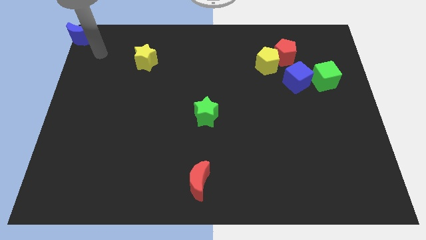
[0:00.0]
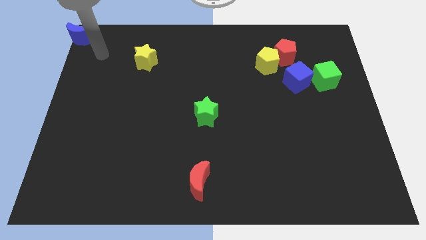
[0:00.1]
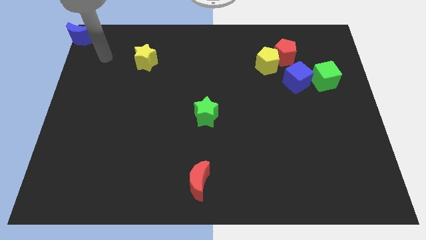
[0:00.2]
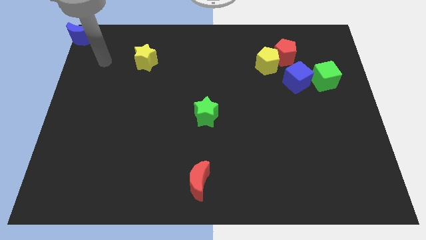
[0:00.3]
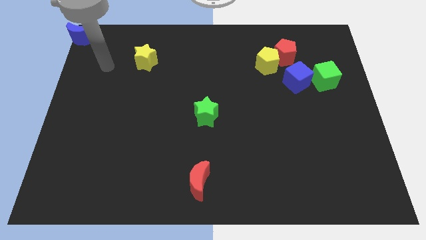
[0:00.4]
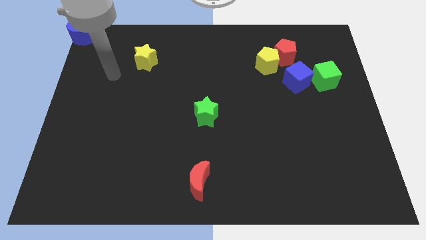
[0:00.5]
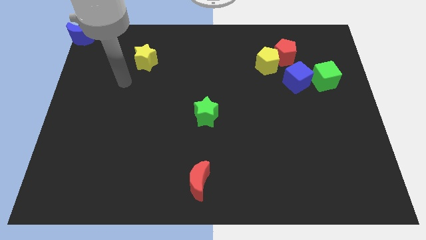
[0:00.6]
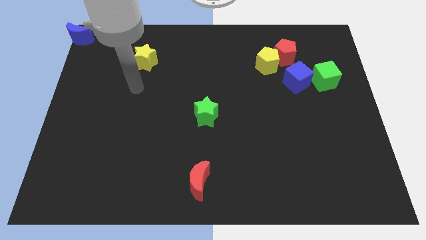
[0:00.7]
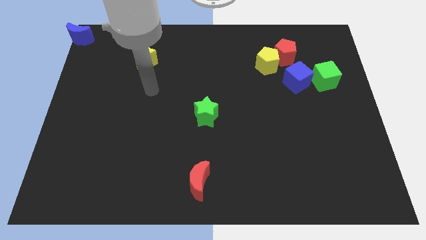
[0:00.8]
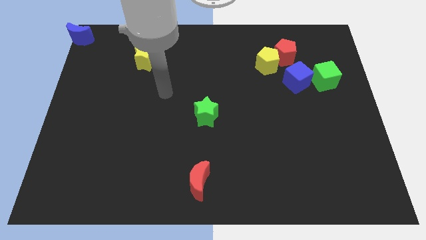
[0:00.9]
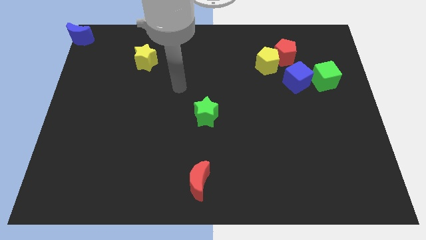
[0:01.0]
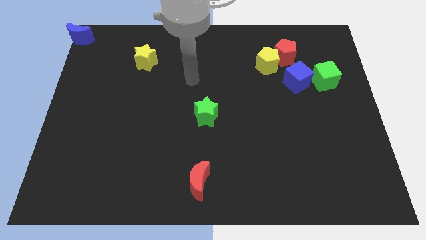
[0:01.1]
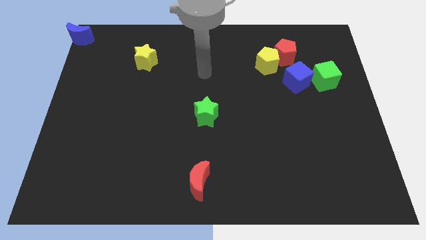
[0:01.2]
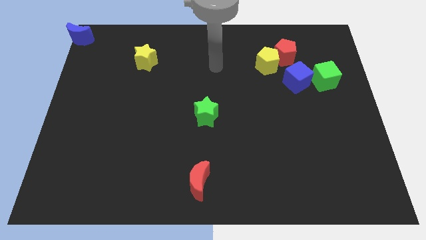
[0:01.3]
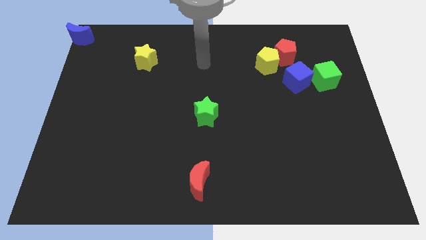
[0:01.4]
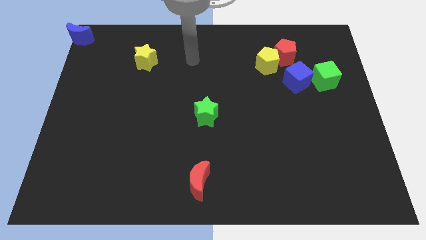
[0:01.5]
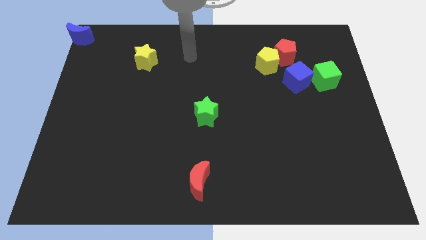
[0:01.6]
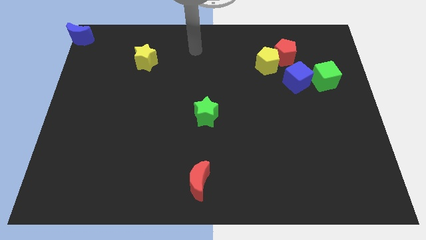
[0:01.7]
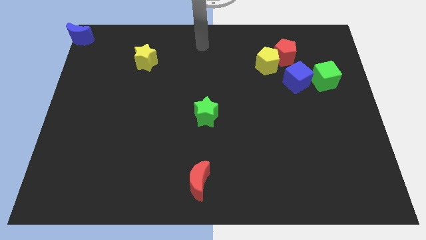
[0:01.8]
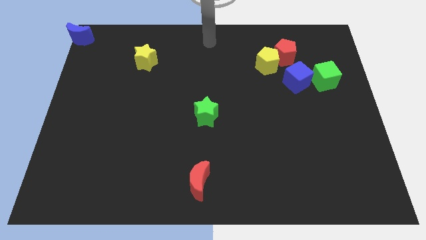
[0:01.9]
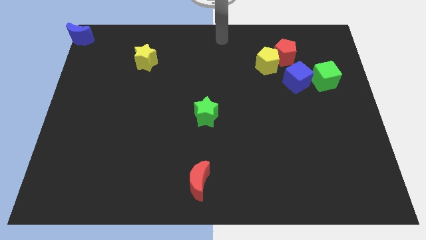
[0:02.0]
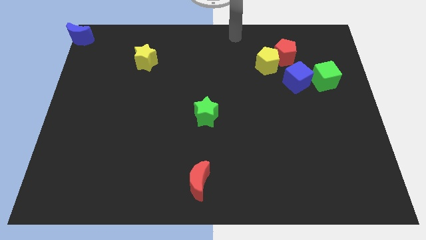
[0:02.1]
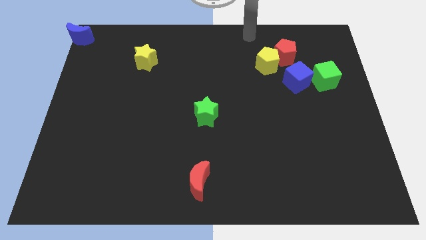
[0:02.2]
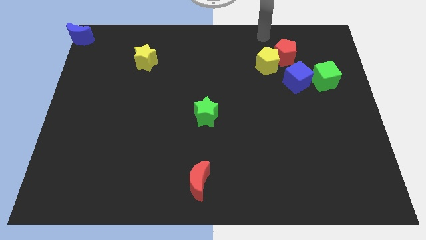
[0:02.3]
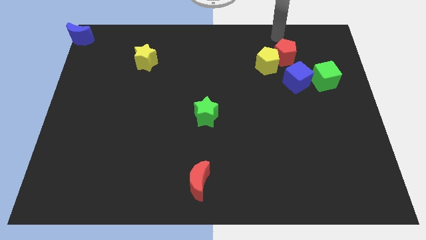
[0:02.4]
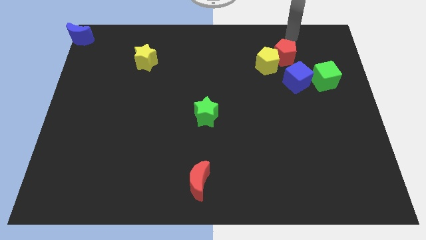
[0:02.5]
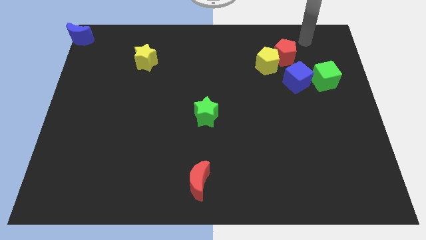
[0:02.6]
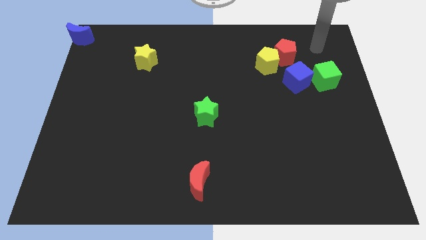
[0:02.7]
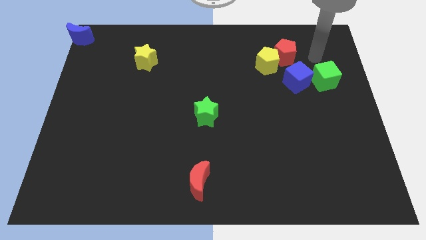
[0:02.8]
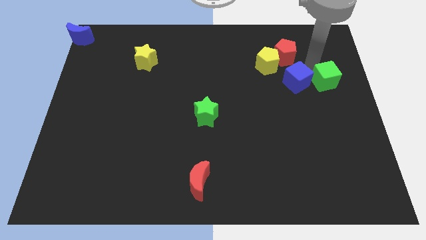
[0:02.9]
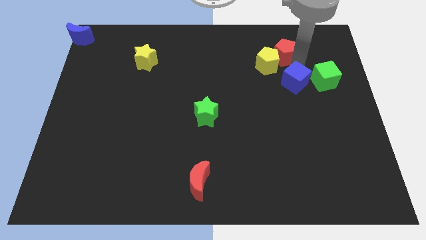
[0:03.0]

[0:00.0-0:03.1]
move your arm away from the blue moon

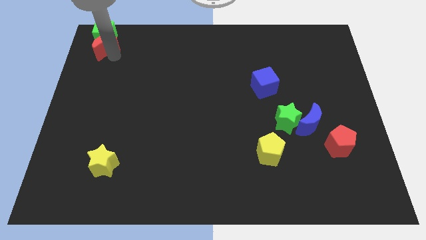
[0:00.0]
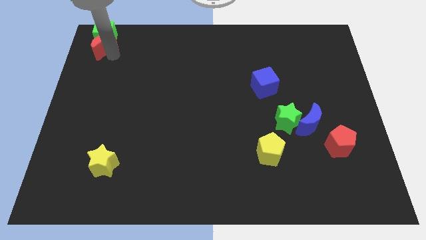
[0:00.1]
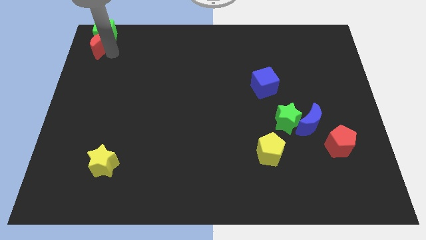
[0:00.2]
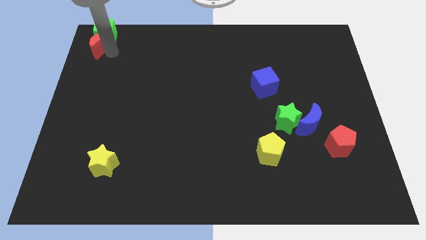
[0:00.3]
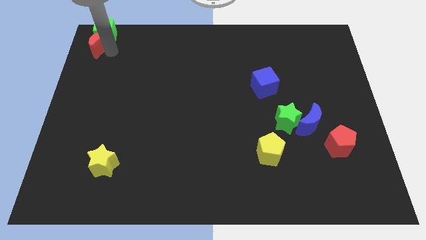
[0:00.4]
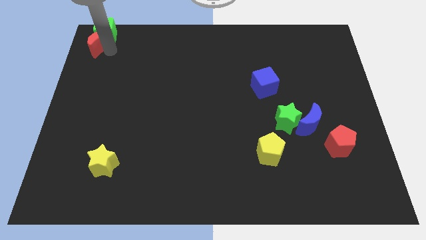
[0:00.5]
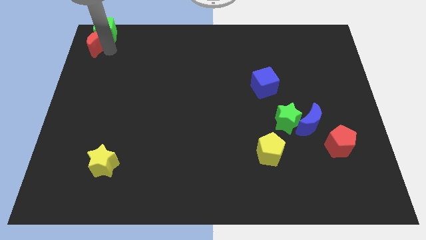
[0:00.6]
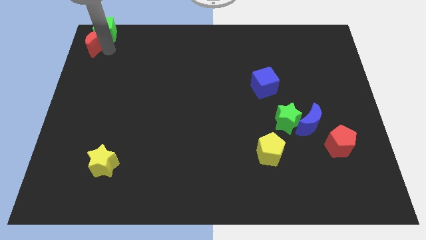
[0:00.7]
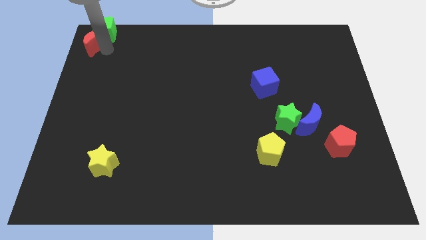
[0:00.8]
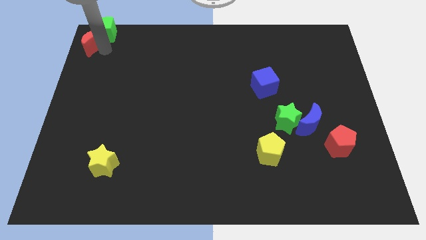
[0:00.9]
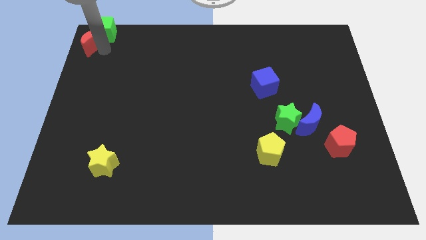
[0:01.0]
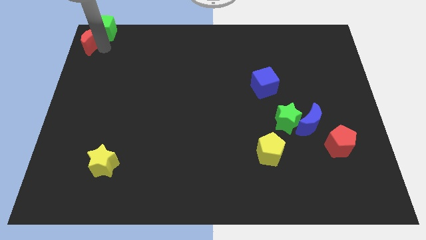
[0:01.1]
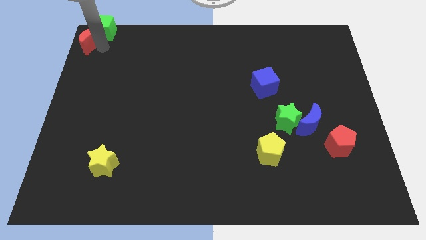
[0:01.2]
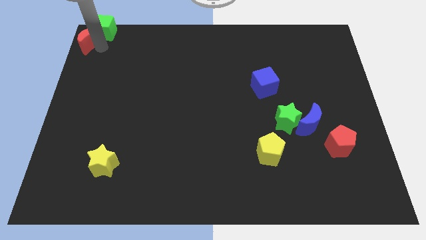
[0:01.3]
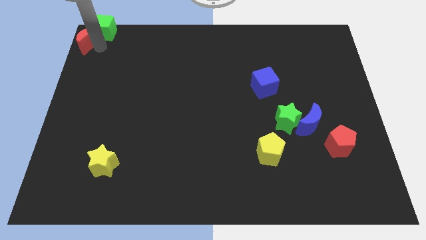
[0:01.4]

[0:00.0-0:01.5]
slide red crescent and green cube at top left corner

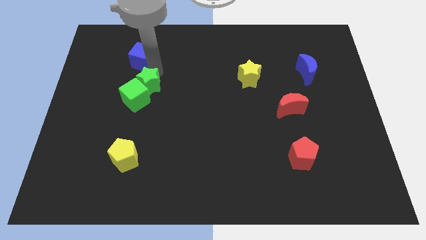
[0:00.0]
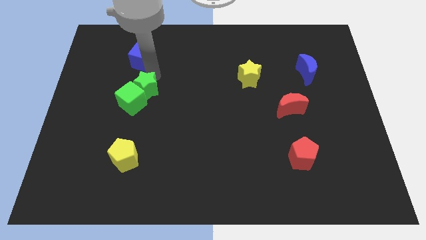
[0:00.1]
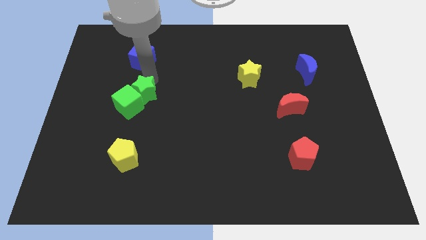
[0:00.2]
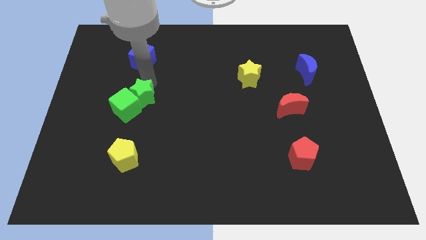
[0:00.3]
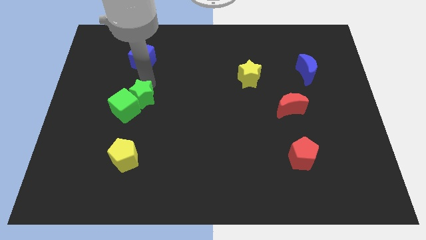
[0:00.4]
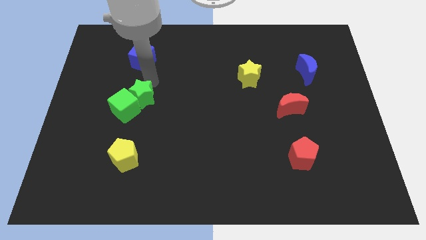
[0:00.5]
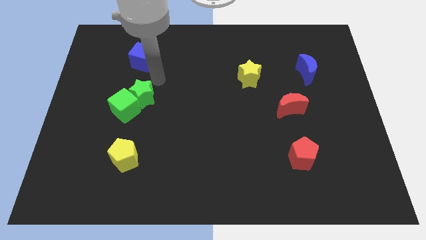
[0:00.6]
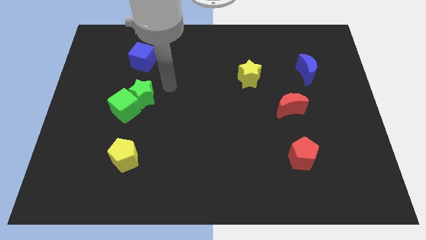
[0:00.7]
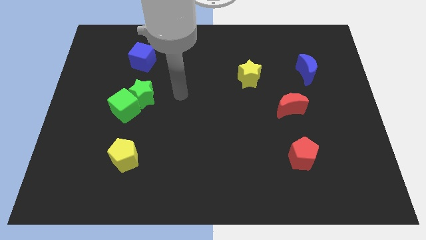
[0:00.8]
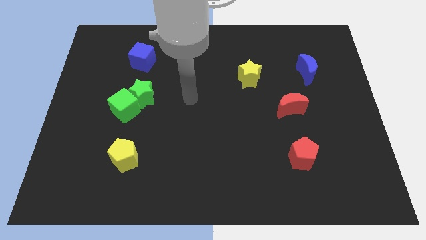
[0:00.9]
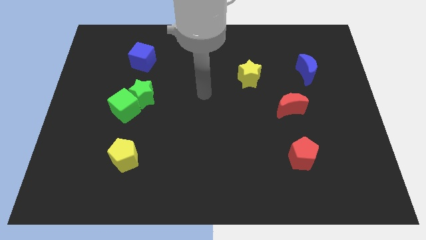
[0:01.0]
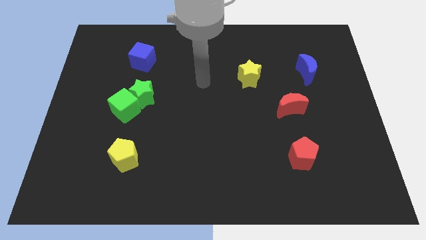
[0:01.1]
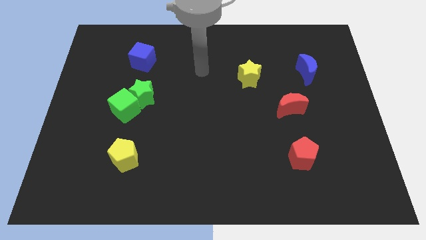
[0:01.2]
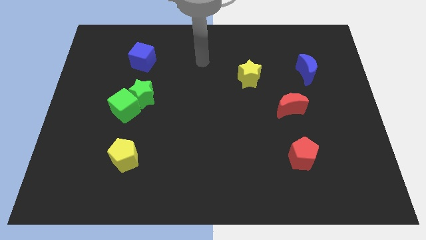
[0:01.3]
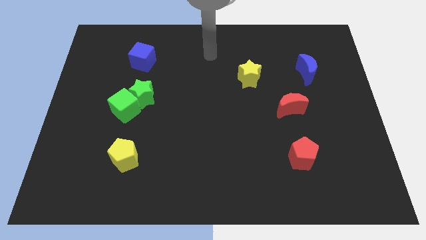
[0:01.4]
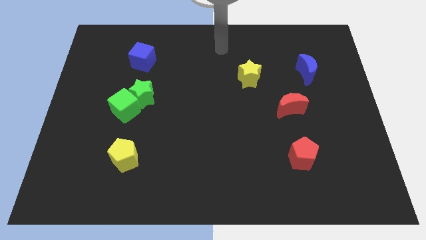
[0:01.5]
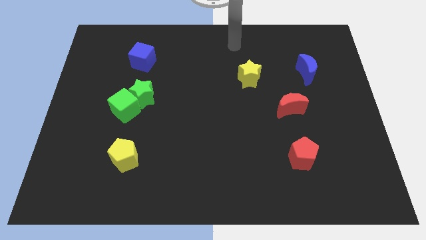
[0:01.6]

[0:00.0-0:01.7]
adjust the green blocks in between the blue cube and yellow pentagon

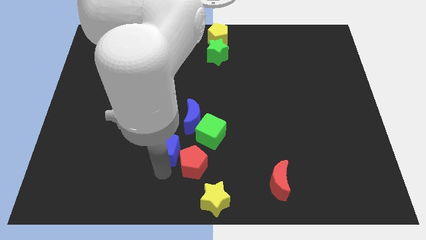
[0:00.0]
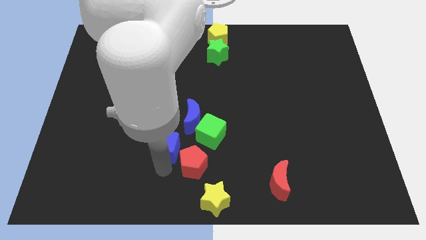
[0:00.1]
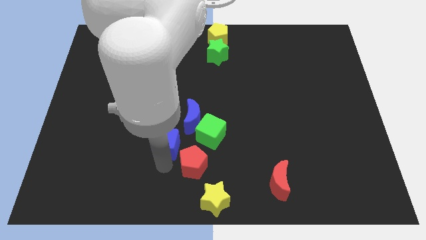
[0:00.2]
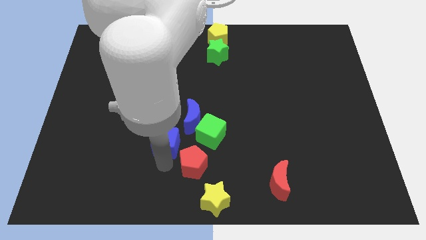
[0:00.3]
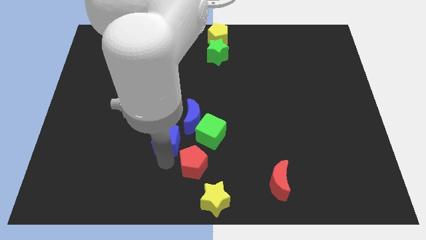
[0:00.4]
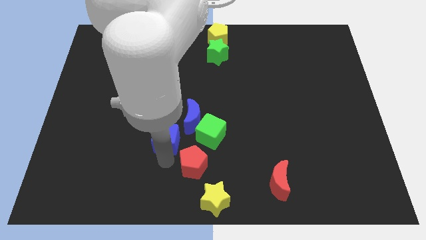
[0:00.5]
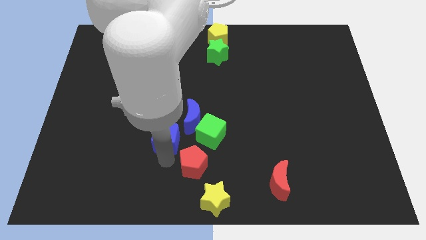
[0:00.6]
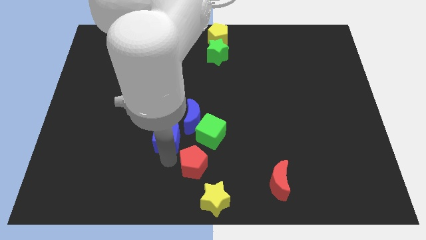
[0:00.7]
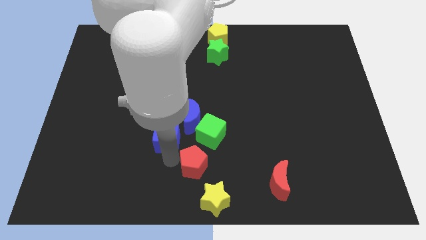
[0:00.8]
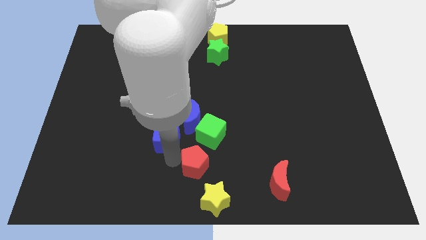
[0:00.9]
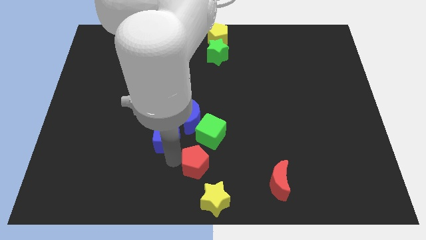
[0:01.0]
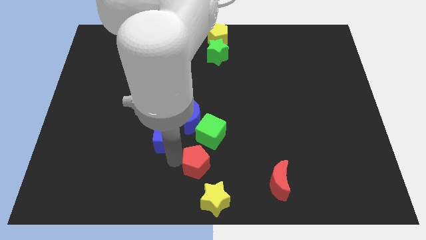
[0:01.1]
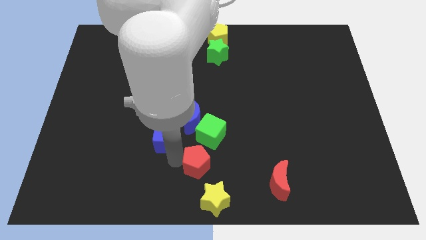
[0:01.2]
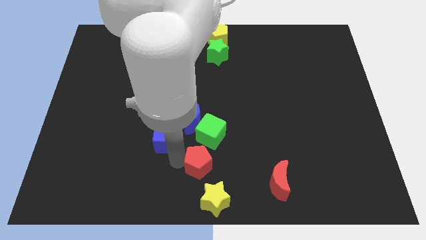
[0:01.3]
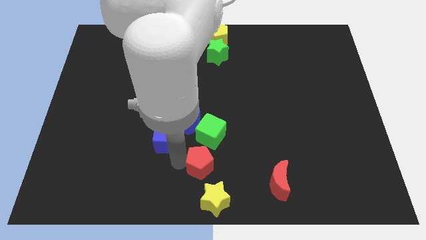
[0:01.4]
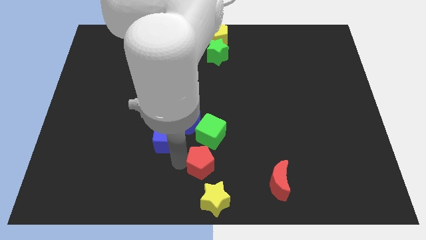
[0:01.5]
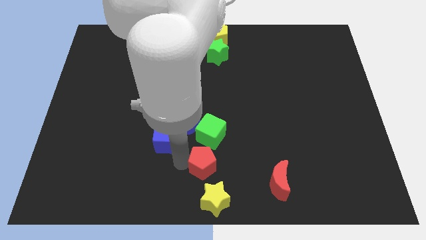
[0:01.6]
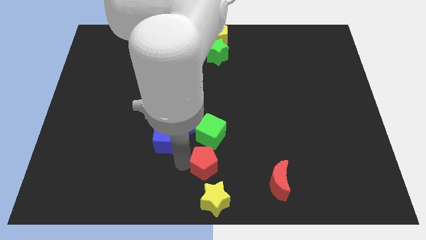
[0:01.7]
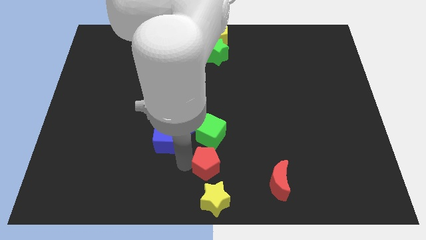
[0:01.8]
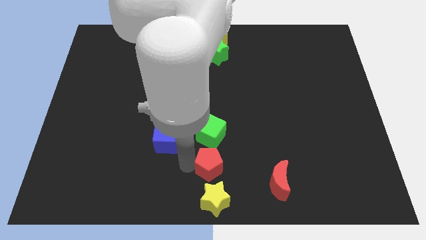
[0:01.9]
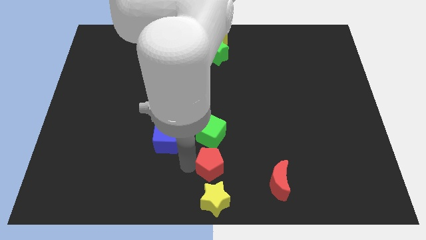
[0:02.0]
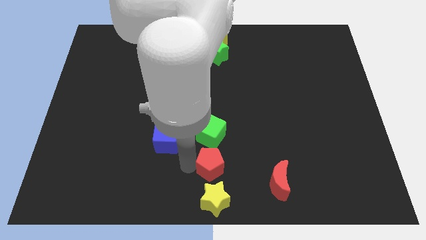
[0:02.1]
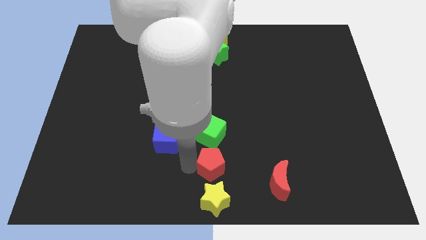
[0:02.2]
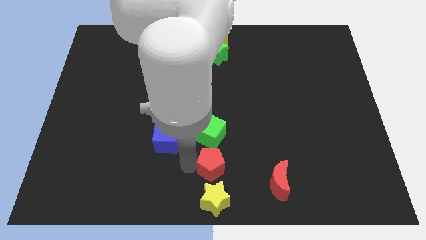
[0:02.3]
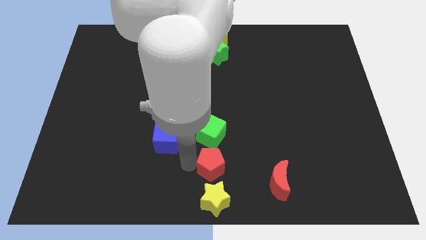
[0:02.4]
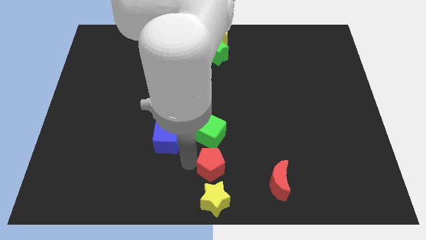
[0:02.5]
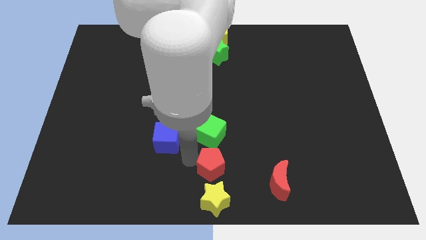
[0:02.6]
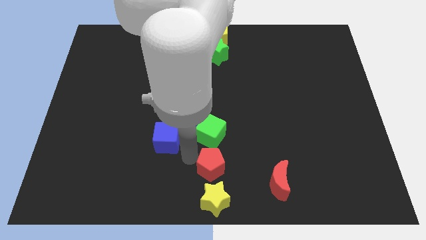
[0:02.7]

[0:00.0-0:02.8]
move the red pentagon down to the green cube
